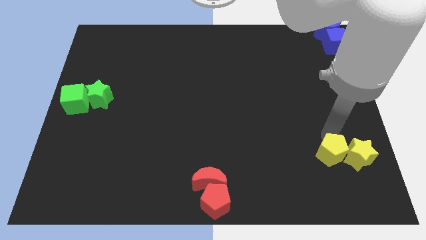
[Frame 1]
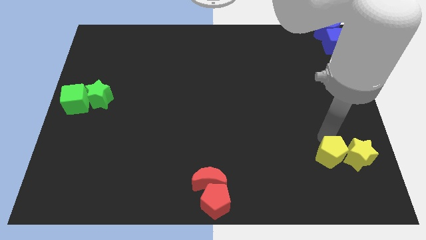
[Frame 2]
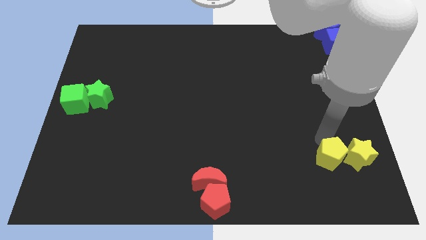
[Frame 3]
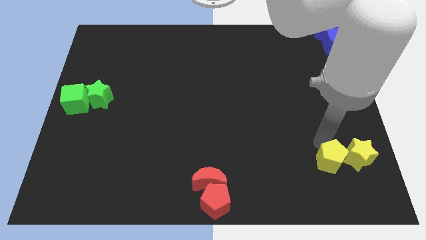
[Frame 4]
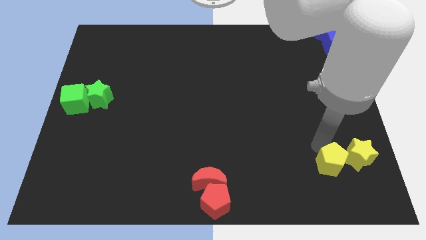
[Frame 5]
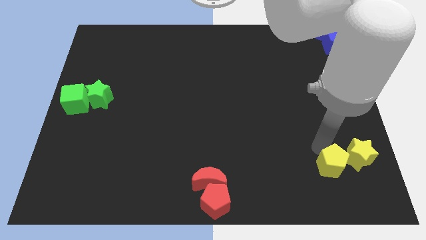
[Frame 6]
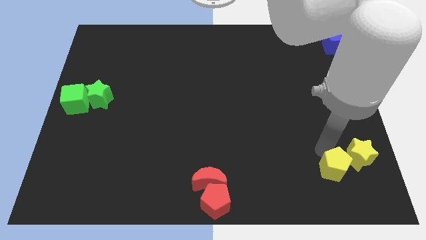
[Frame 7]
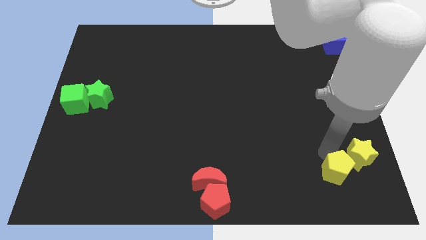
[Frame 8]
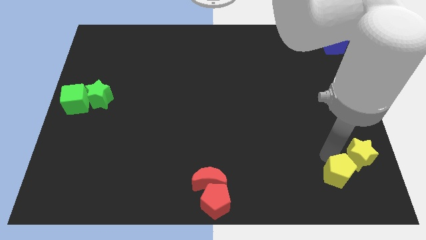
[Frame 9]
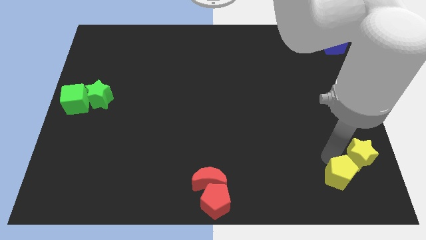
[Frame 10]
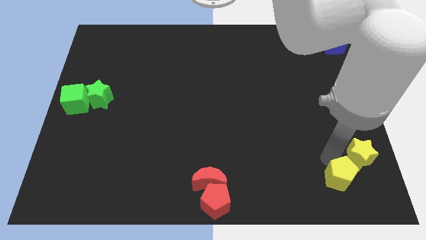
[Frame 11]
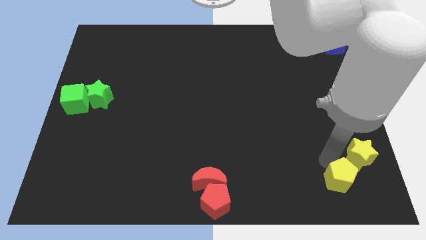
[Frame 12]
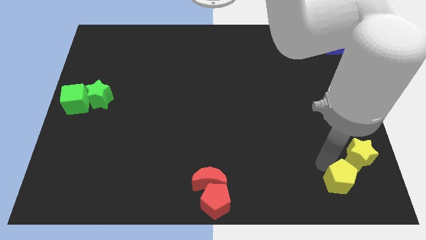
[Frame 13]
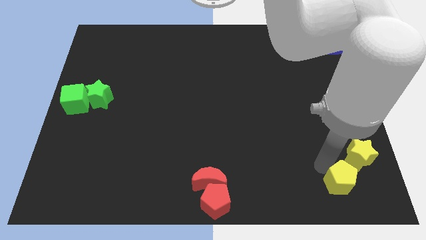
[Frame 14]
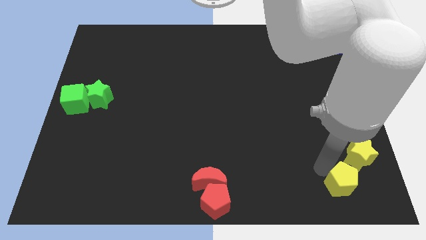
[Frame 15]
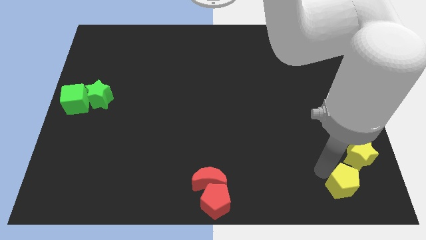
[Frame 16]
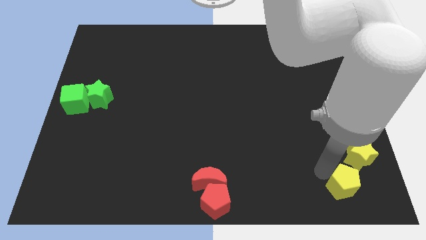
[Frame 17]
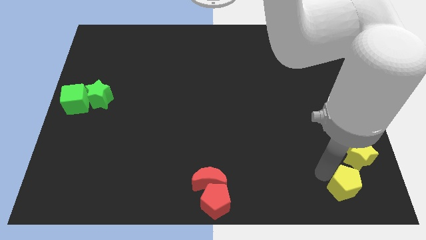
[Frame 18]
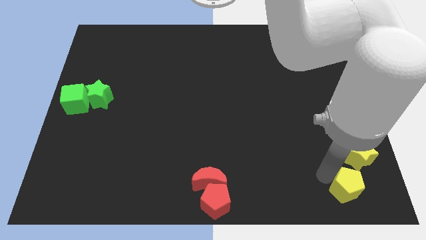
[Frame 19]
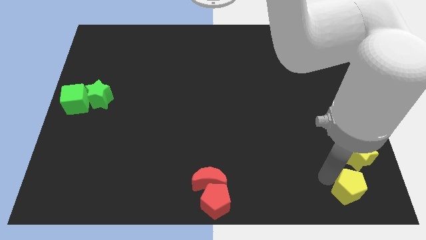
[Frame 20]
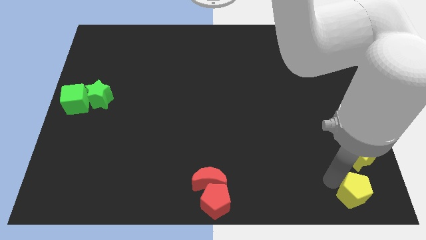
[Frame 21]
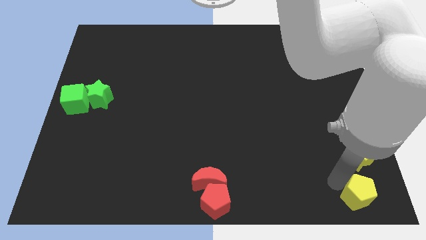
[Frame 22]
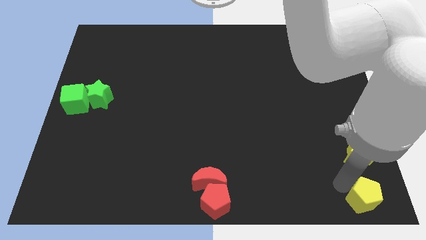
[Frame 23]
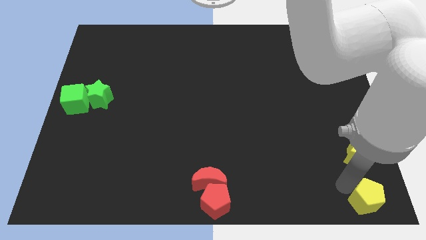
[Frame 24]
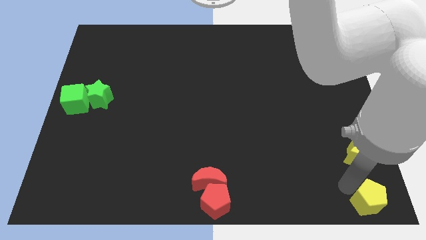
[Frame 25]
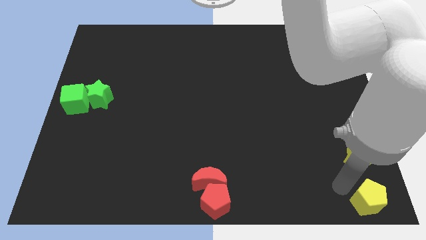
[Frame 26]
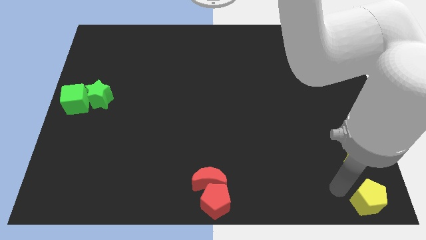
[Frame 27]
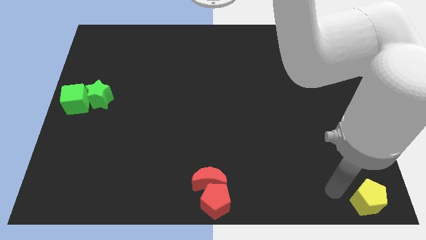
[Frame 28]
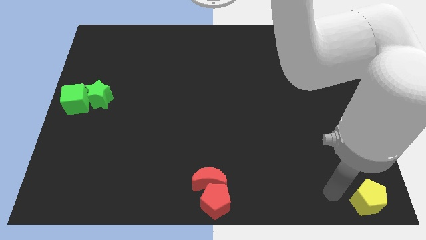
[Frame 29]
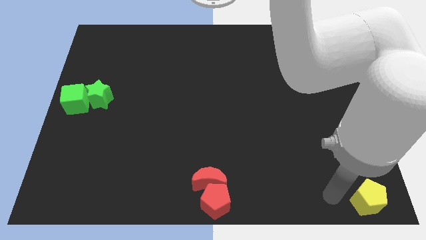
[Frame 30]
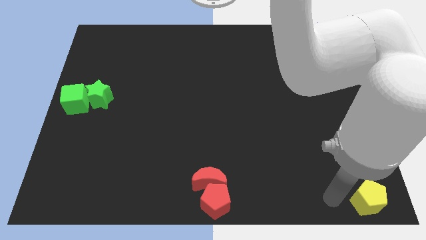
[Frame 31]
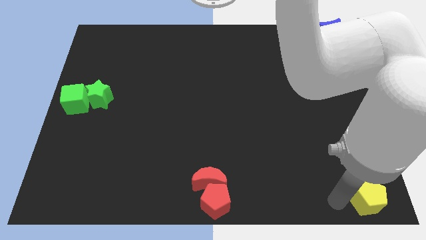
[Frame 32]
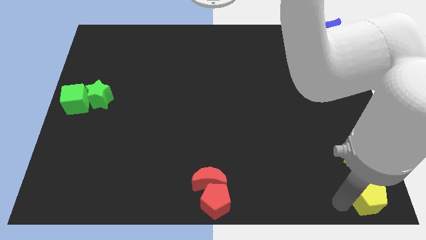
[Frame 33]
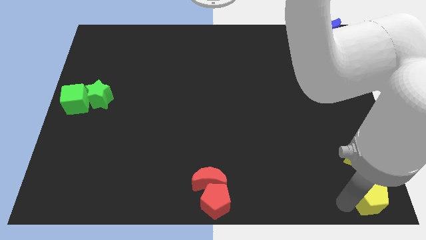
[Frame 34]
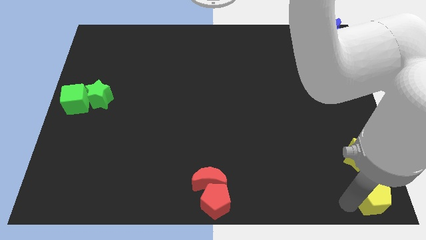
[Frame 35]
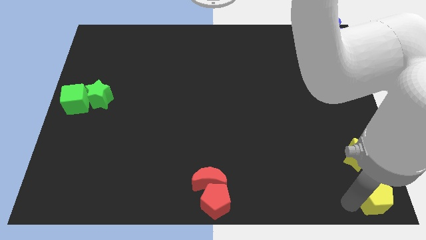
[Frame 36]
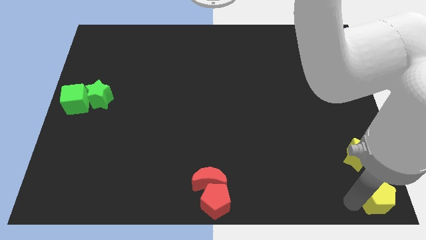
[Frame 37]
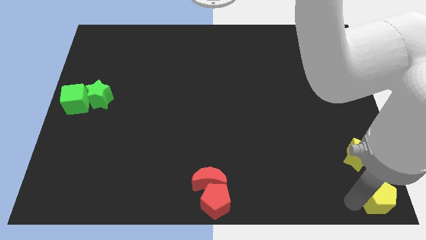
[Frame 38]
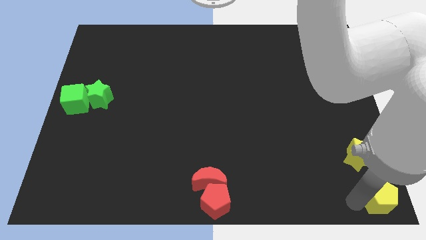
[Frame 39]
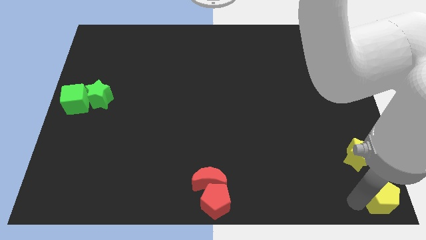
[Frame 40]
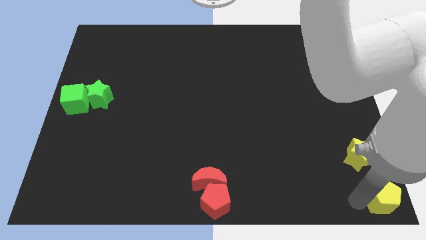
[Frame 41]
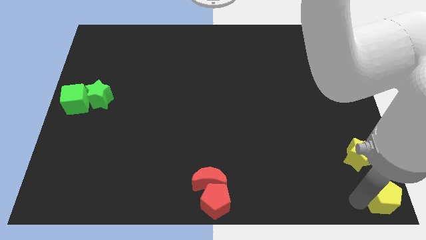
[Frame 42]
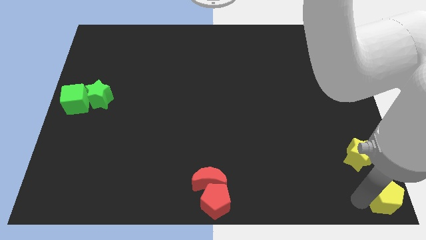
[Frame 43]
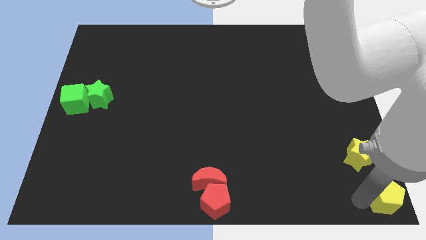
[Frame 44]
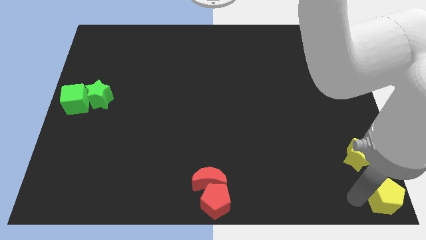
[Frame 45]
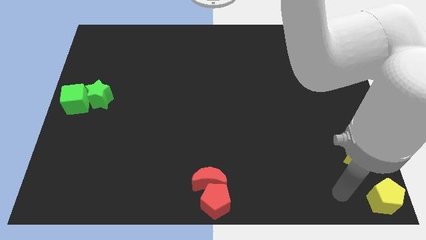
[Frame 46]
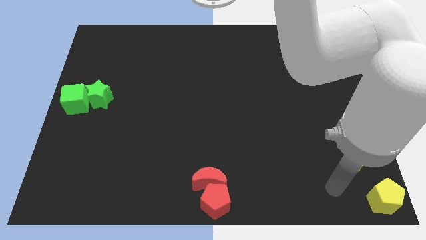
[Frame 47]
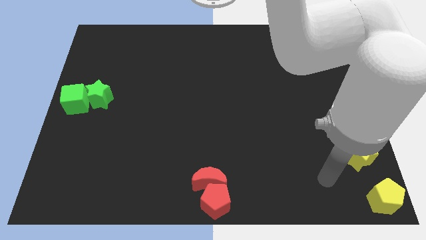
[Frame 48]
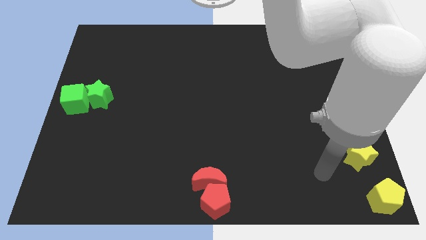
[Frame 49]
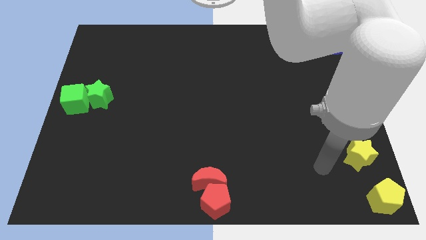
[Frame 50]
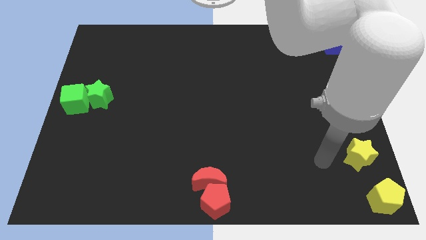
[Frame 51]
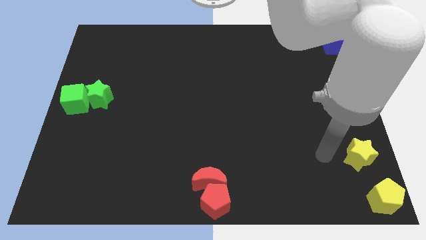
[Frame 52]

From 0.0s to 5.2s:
place the yellow pentagon at the bottom right corner of the board

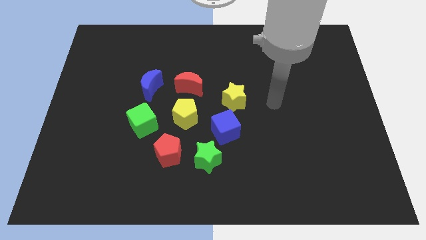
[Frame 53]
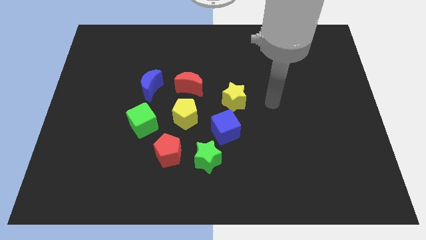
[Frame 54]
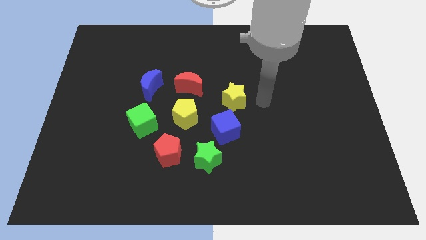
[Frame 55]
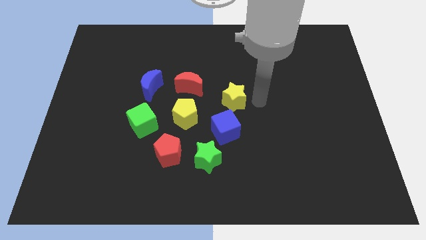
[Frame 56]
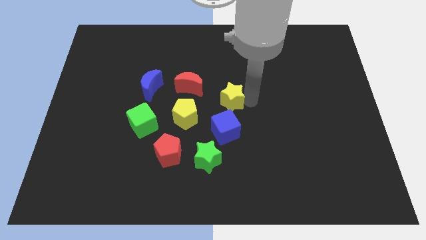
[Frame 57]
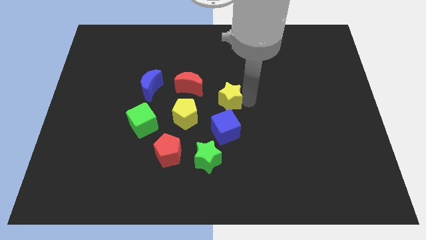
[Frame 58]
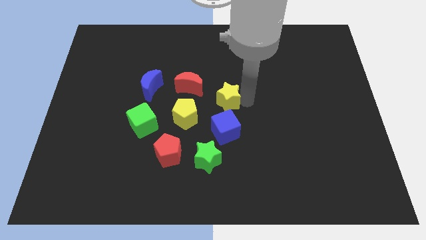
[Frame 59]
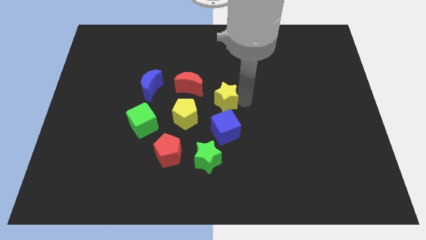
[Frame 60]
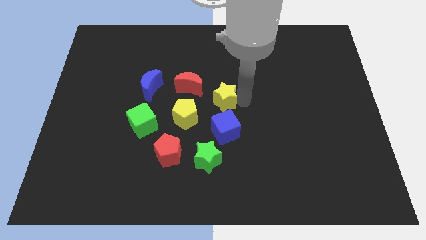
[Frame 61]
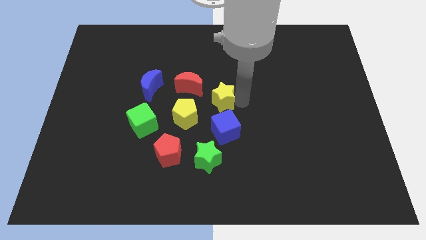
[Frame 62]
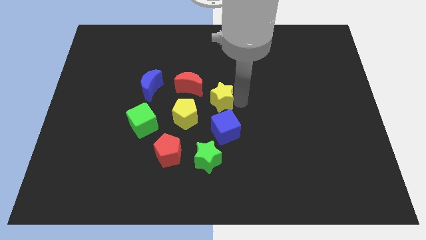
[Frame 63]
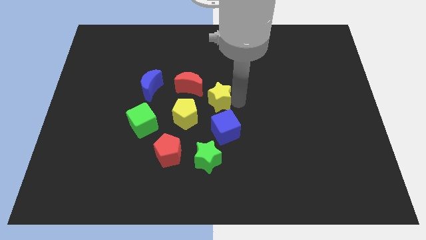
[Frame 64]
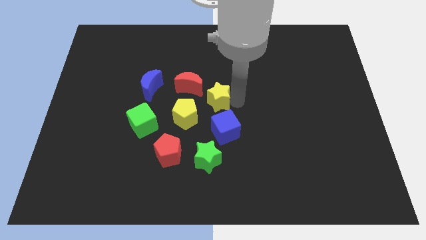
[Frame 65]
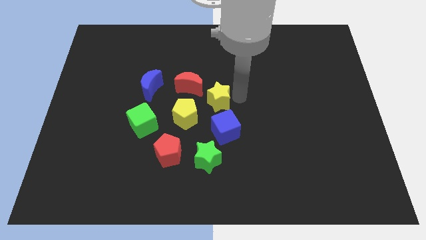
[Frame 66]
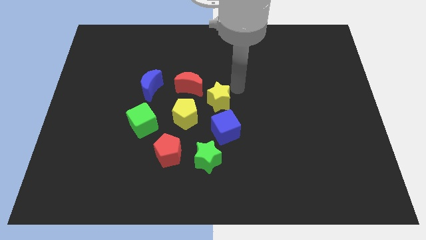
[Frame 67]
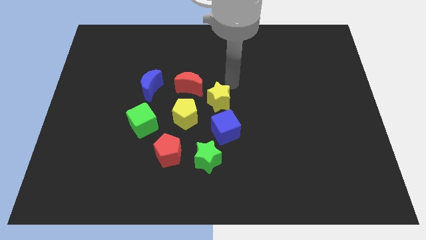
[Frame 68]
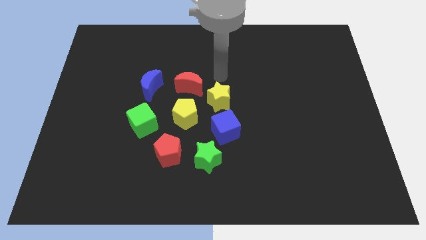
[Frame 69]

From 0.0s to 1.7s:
slide the yellow star slightly to the left

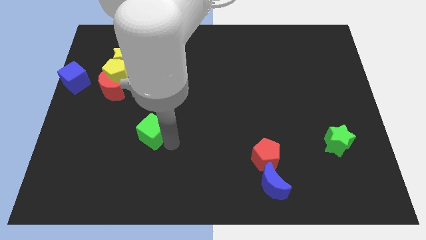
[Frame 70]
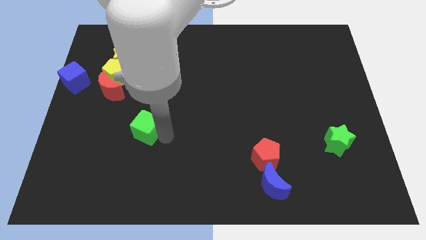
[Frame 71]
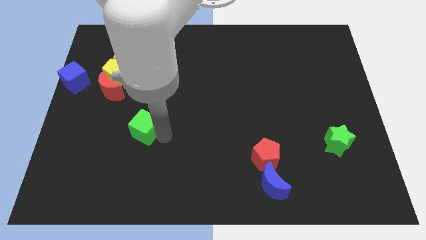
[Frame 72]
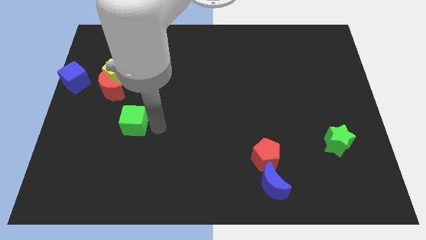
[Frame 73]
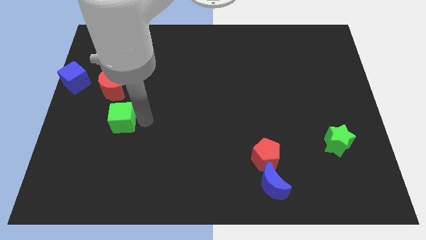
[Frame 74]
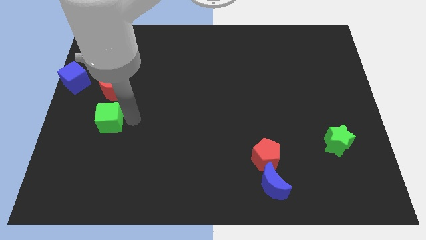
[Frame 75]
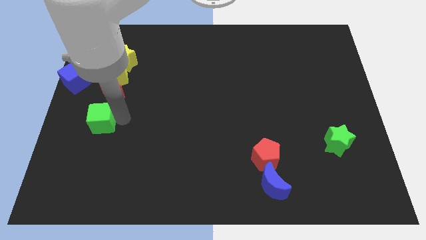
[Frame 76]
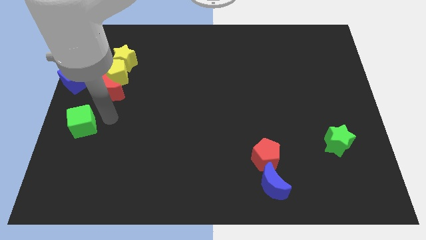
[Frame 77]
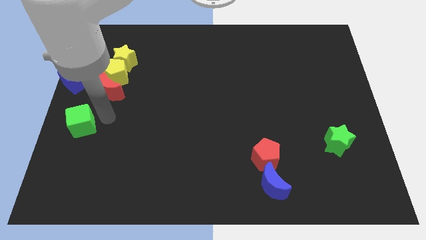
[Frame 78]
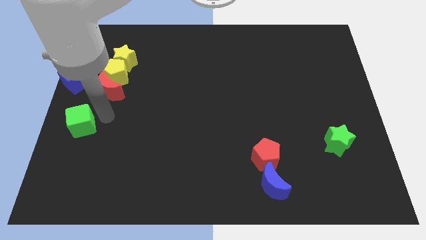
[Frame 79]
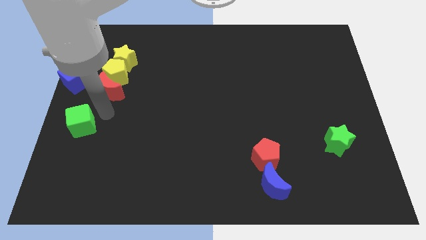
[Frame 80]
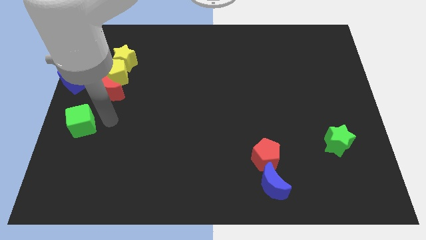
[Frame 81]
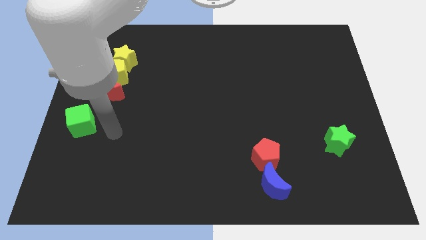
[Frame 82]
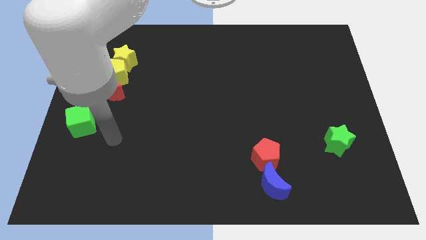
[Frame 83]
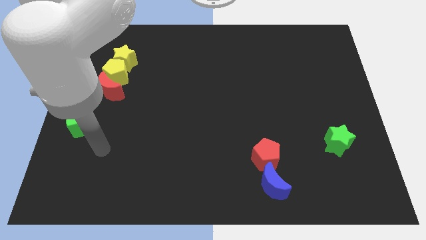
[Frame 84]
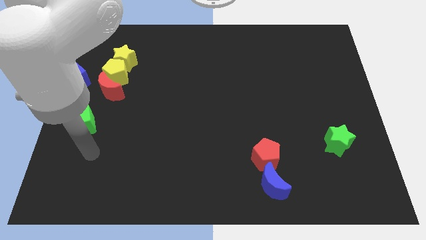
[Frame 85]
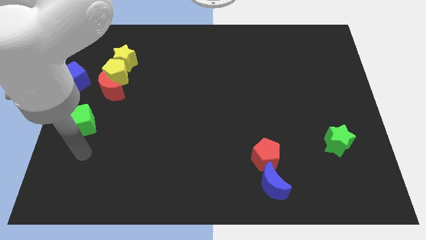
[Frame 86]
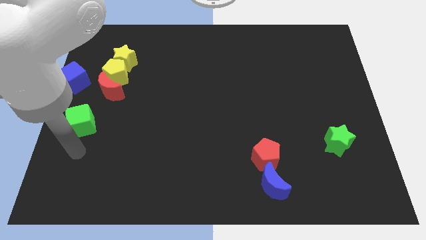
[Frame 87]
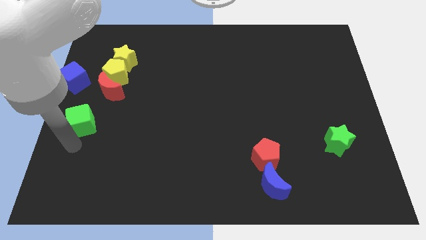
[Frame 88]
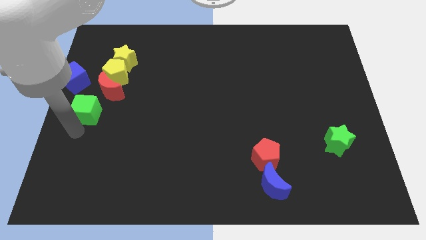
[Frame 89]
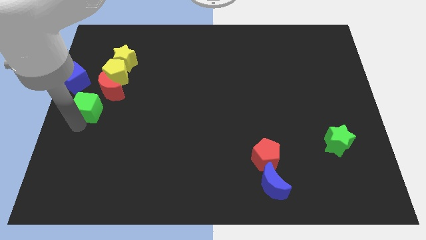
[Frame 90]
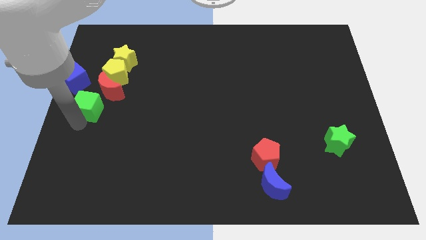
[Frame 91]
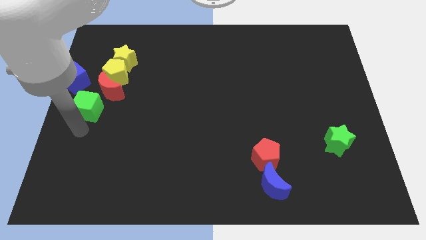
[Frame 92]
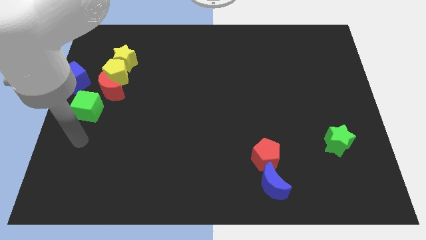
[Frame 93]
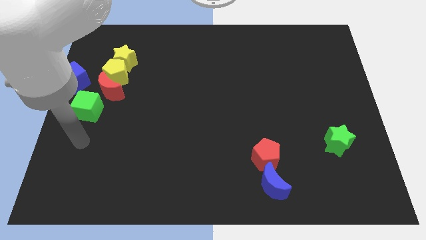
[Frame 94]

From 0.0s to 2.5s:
put the green cube at the center left side of the board
